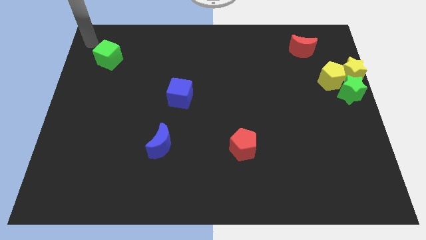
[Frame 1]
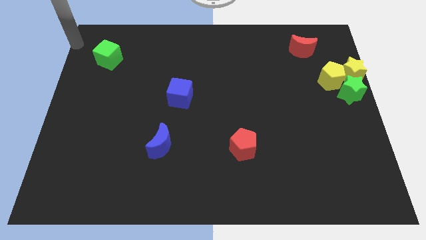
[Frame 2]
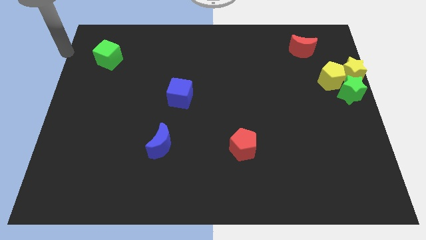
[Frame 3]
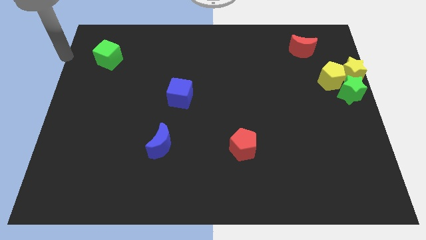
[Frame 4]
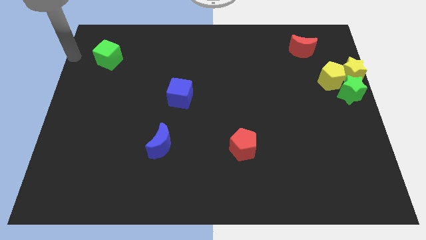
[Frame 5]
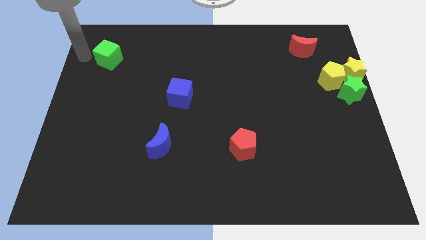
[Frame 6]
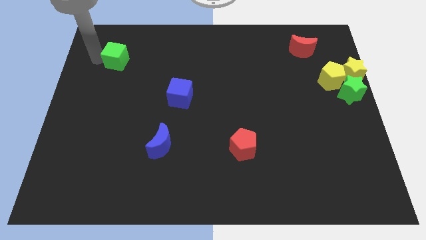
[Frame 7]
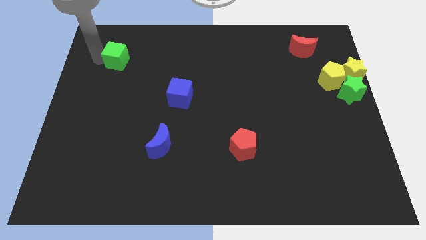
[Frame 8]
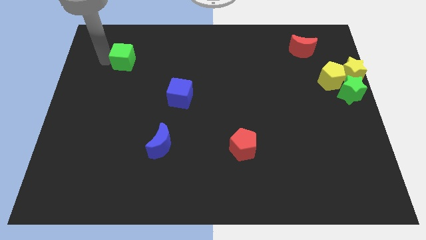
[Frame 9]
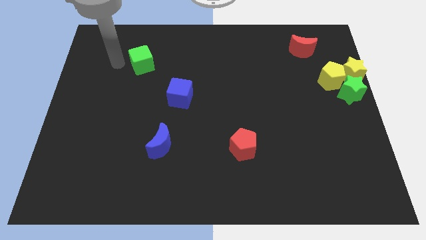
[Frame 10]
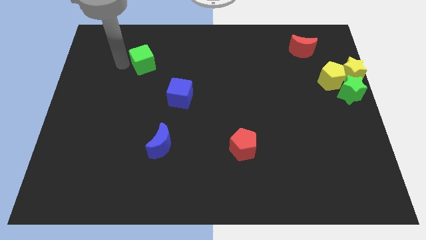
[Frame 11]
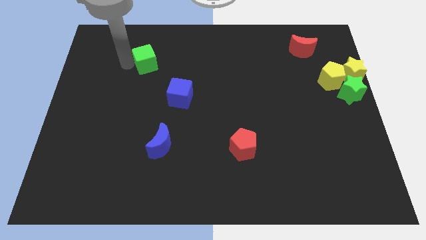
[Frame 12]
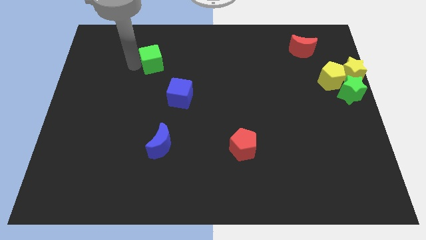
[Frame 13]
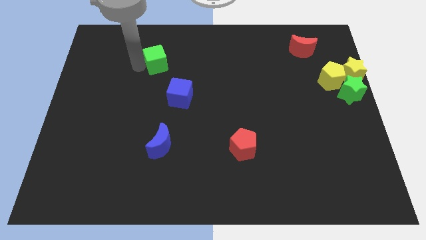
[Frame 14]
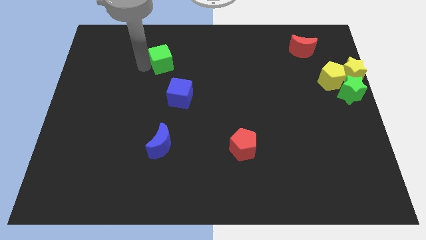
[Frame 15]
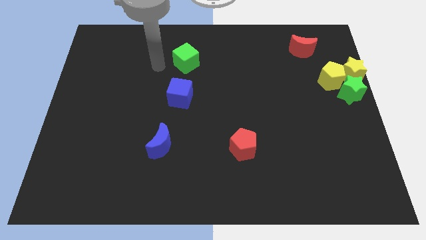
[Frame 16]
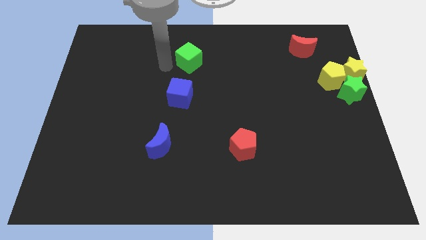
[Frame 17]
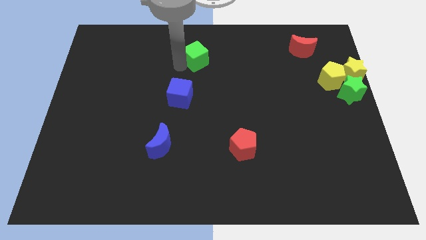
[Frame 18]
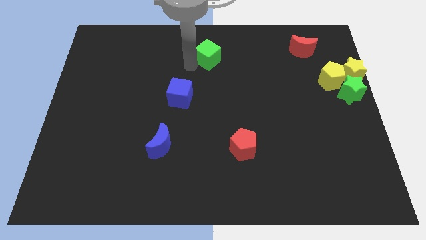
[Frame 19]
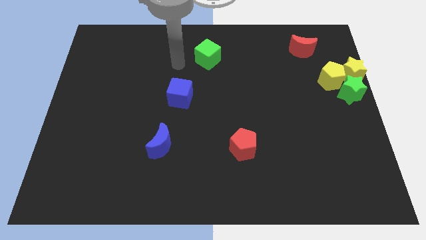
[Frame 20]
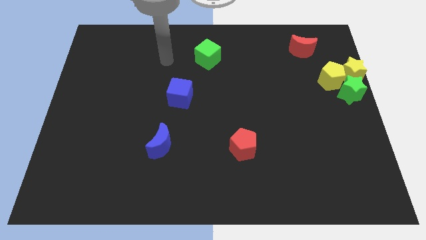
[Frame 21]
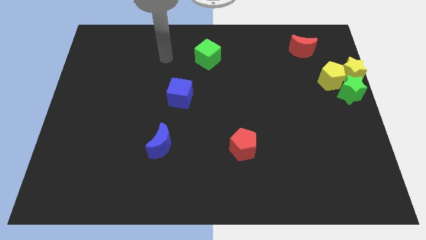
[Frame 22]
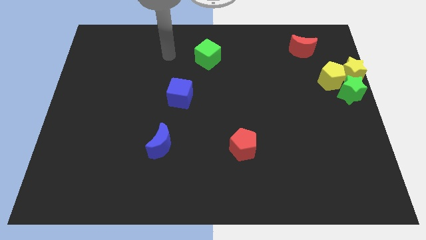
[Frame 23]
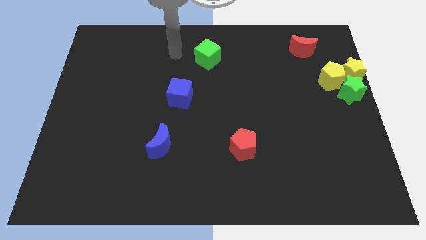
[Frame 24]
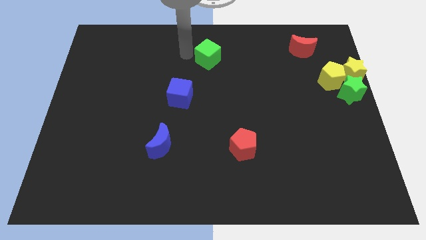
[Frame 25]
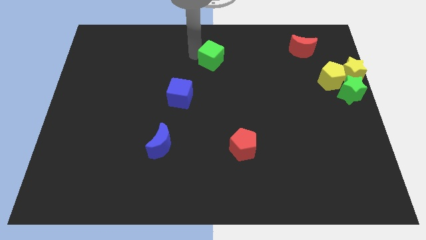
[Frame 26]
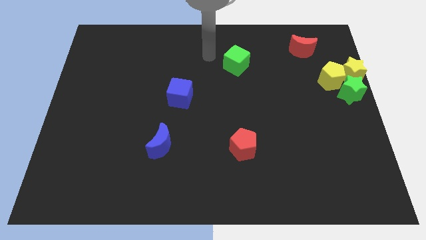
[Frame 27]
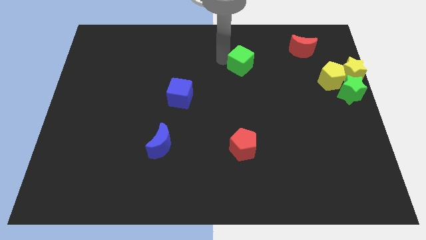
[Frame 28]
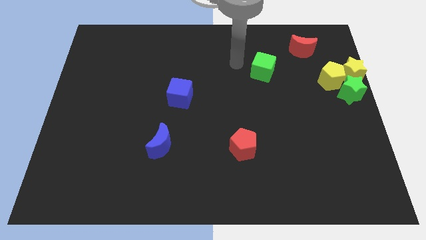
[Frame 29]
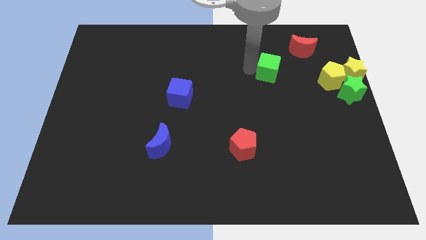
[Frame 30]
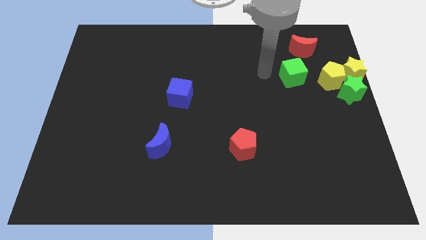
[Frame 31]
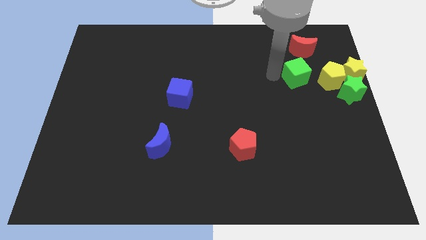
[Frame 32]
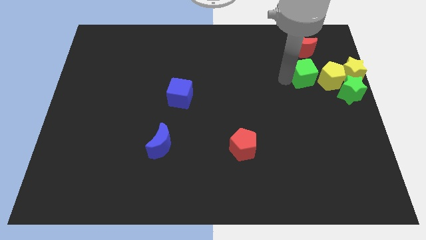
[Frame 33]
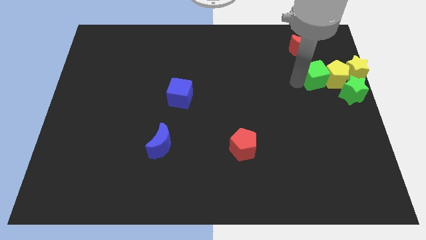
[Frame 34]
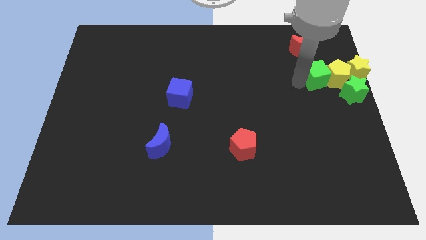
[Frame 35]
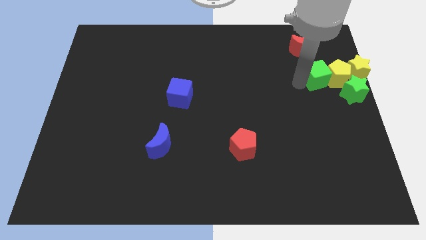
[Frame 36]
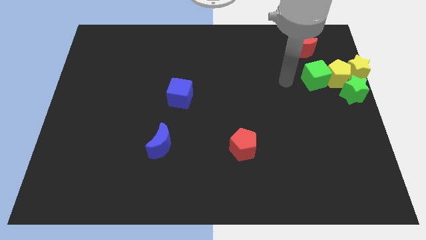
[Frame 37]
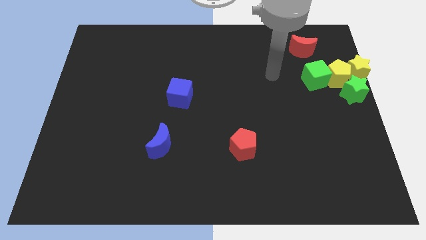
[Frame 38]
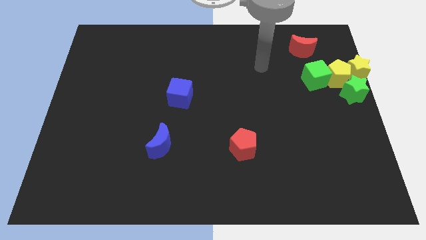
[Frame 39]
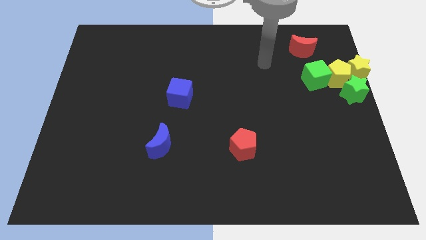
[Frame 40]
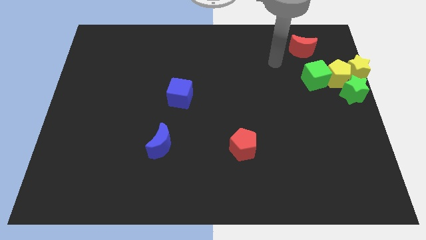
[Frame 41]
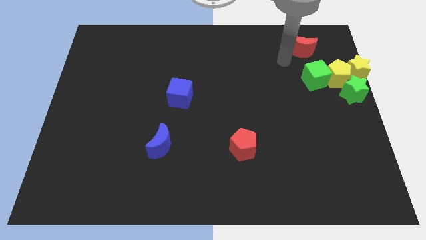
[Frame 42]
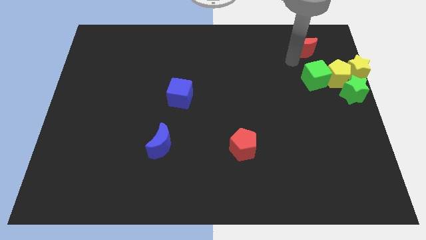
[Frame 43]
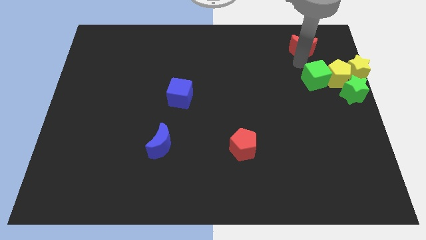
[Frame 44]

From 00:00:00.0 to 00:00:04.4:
push the yellow pentagon with the green cube

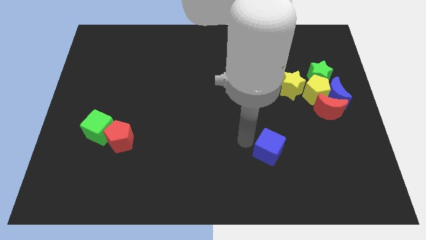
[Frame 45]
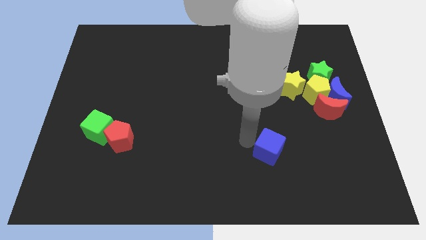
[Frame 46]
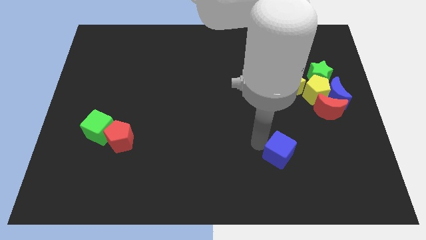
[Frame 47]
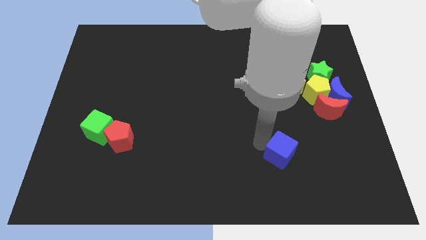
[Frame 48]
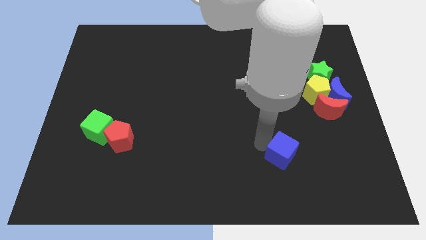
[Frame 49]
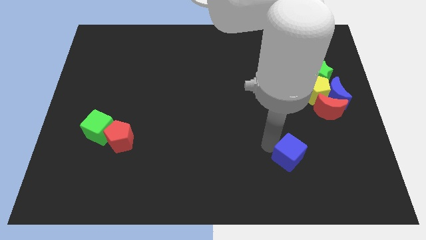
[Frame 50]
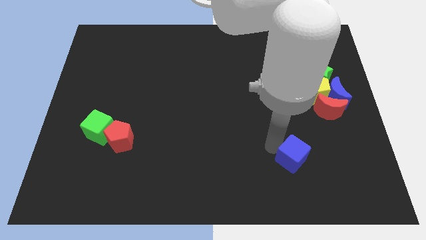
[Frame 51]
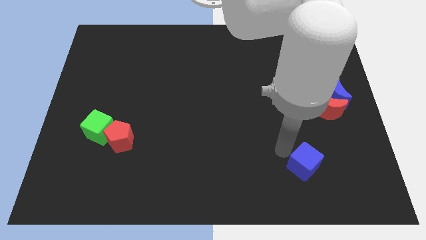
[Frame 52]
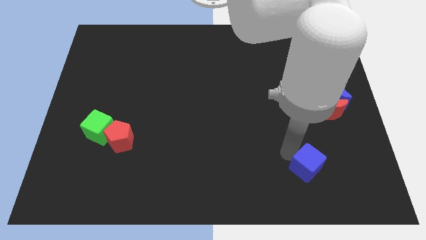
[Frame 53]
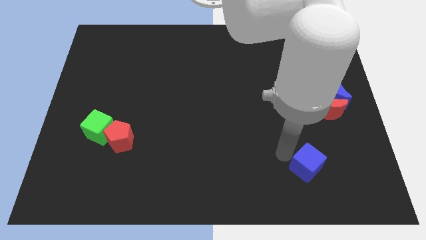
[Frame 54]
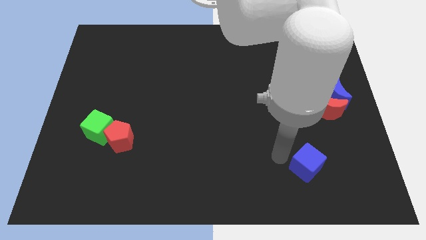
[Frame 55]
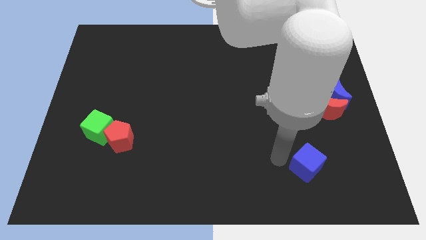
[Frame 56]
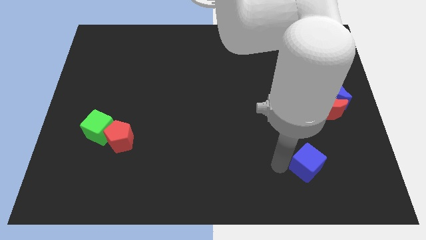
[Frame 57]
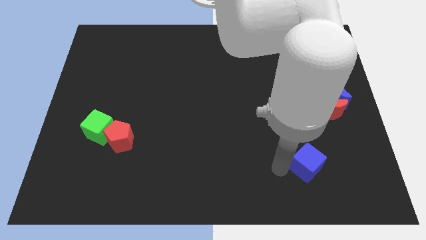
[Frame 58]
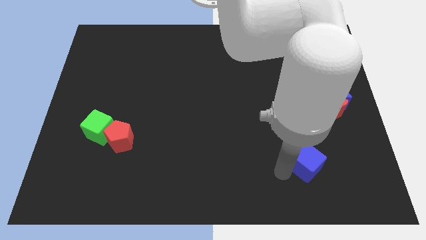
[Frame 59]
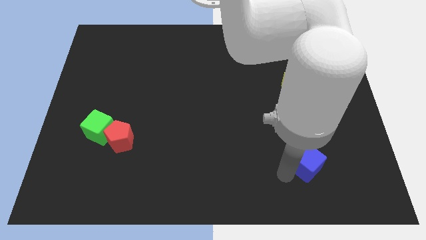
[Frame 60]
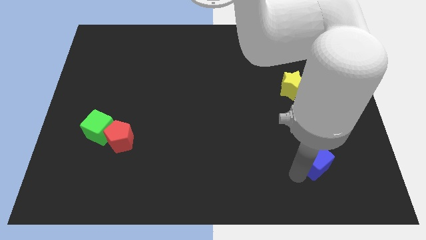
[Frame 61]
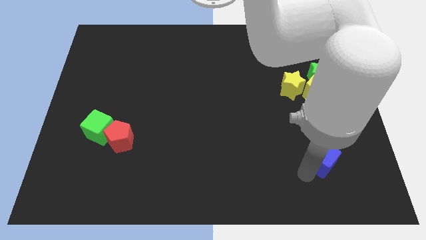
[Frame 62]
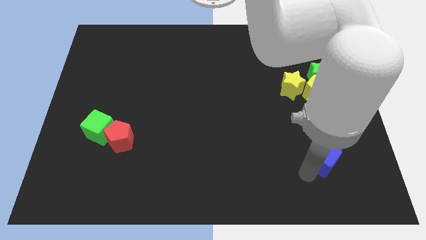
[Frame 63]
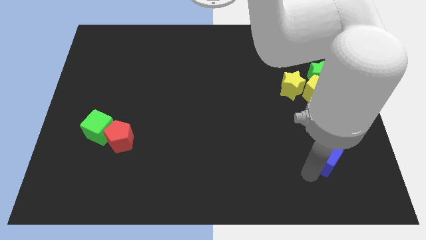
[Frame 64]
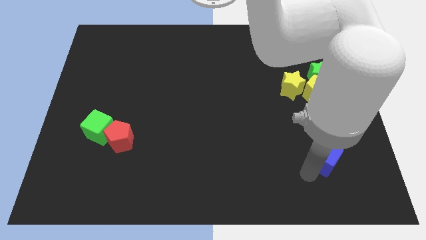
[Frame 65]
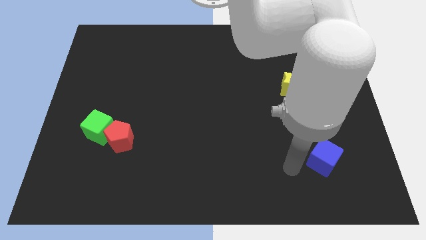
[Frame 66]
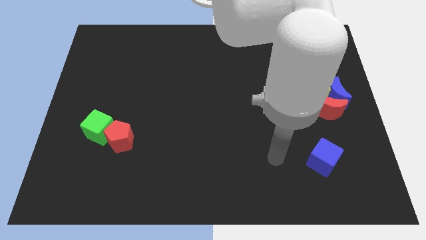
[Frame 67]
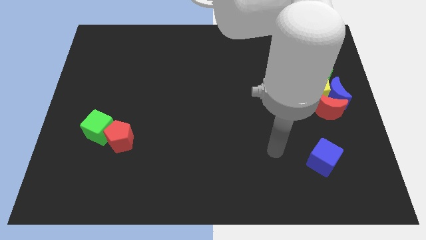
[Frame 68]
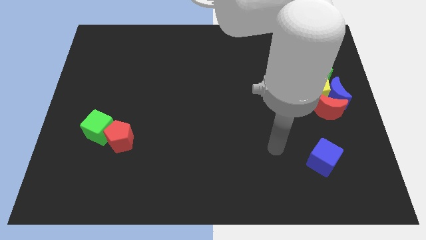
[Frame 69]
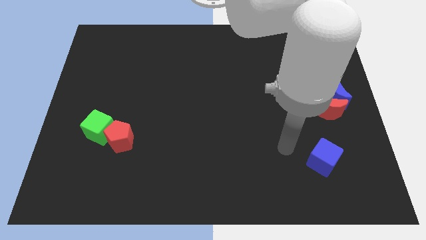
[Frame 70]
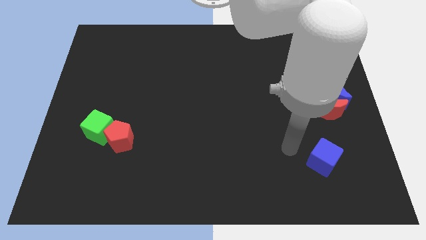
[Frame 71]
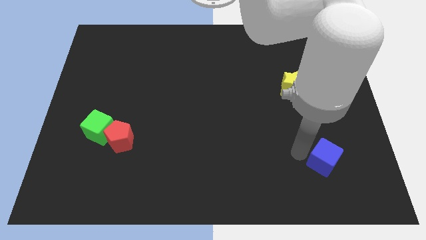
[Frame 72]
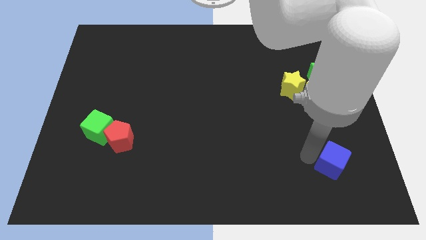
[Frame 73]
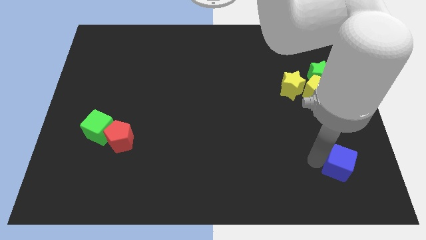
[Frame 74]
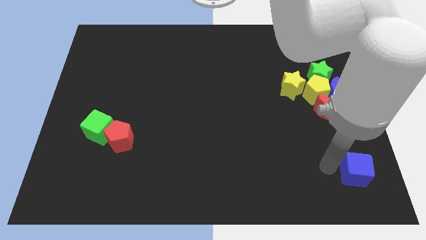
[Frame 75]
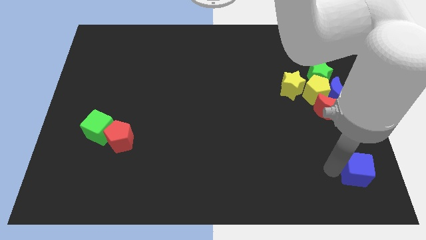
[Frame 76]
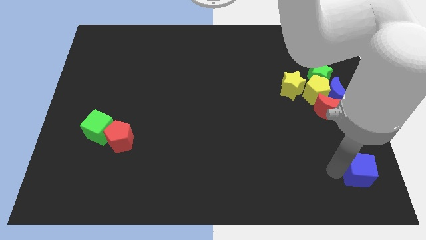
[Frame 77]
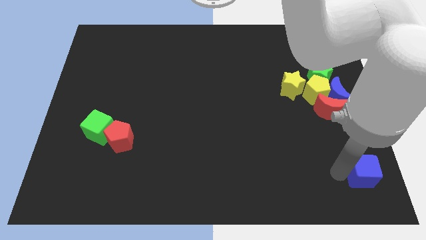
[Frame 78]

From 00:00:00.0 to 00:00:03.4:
move the blue cube to the bottom right side of the board

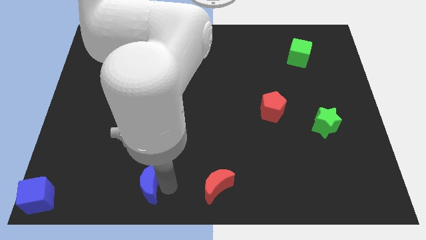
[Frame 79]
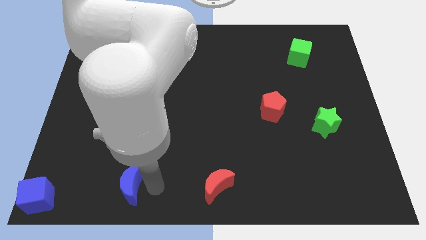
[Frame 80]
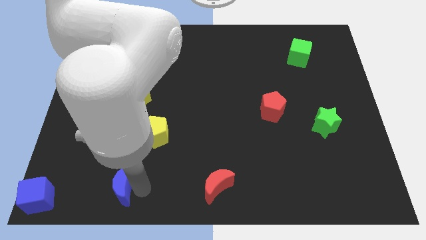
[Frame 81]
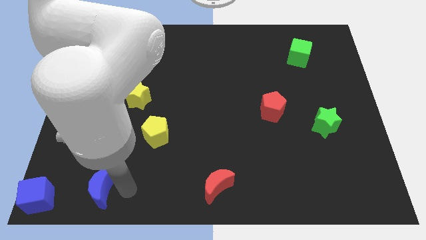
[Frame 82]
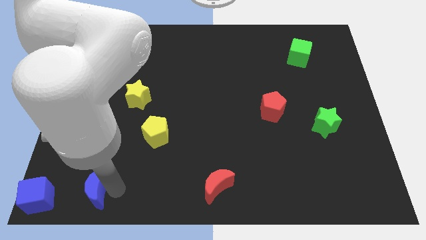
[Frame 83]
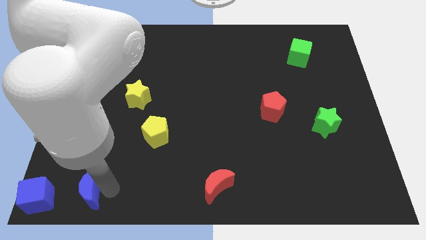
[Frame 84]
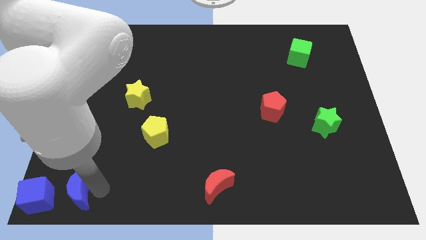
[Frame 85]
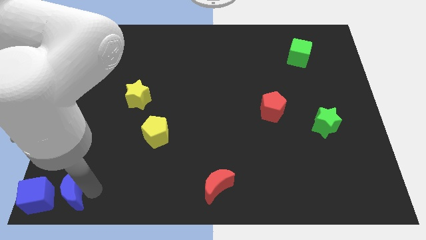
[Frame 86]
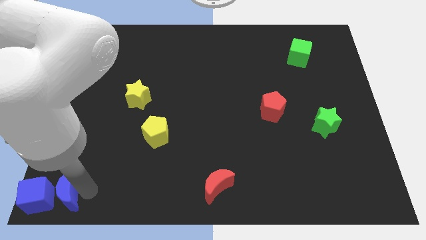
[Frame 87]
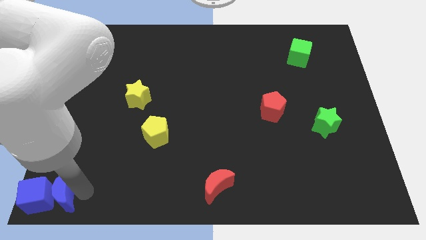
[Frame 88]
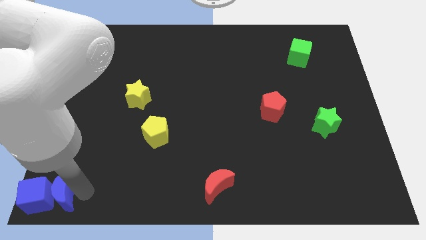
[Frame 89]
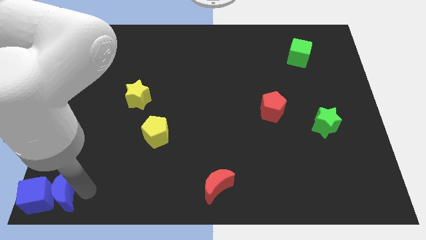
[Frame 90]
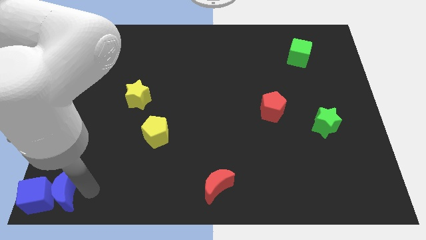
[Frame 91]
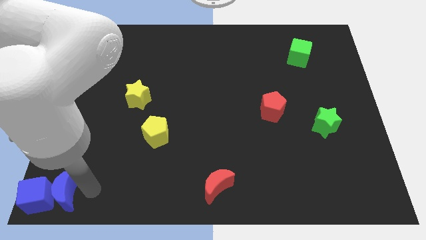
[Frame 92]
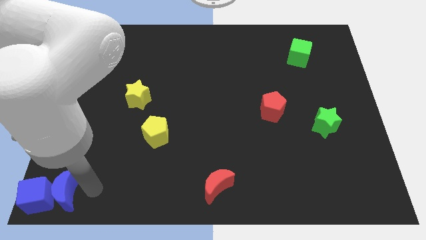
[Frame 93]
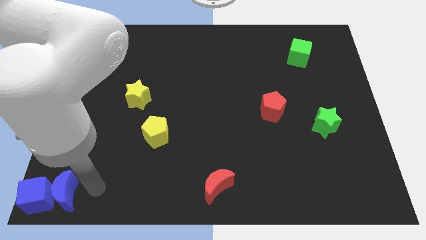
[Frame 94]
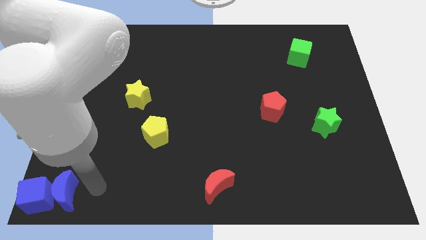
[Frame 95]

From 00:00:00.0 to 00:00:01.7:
place the blue moon right to the blue cube
